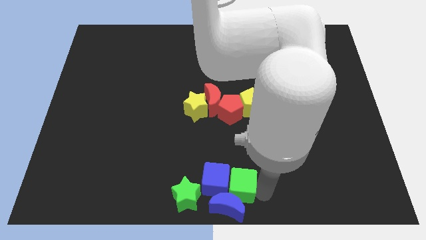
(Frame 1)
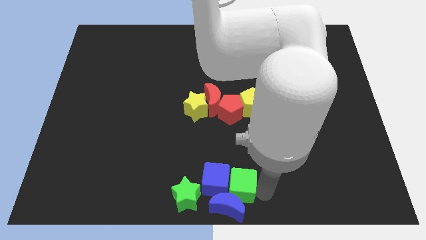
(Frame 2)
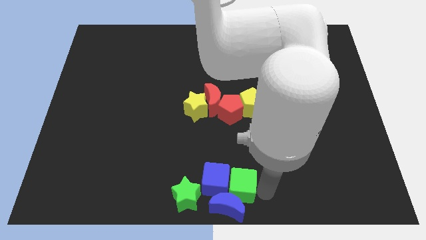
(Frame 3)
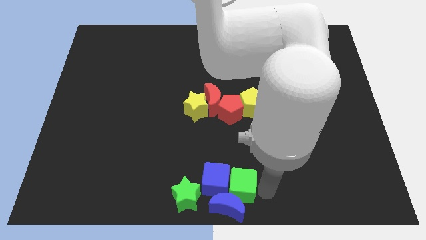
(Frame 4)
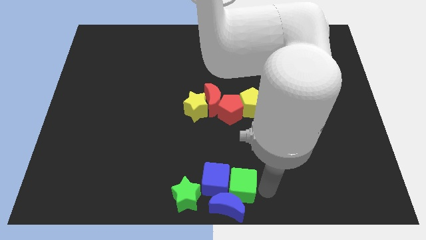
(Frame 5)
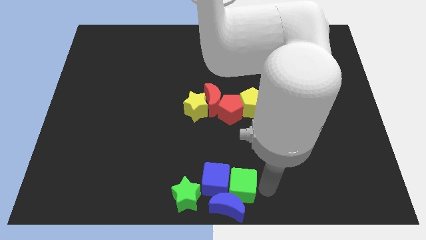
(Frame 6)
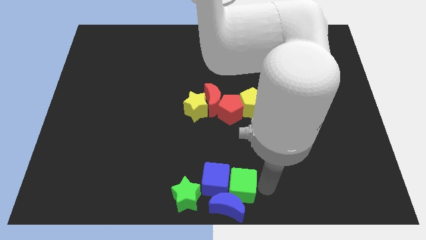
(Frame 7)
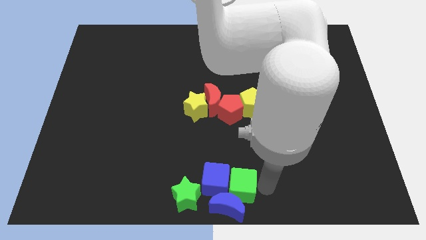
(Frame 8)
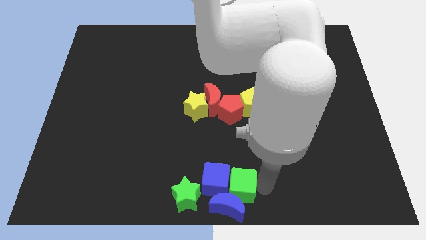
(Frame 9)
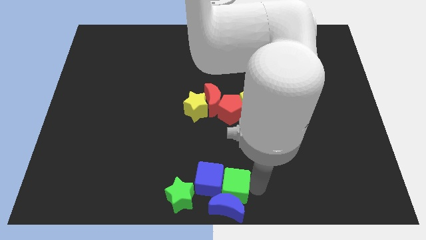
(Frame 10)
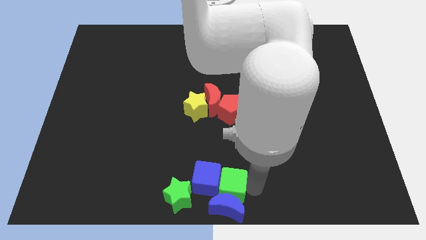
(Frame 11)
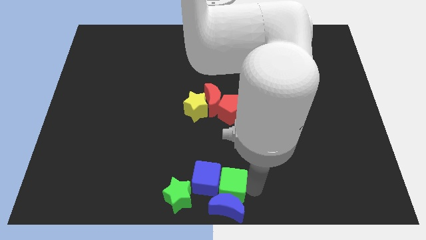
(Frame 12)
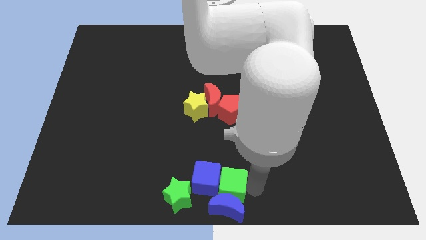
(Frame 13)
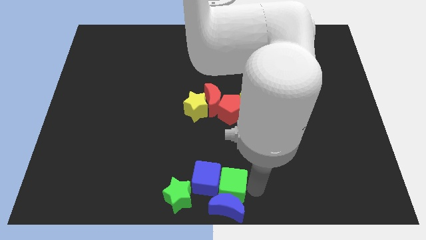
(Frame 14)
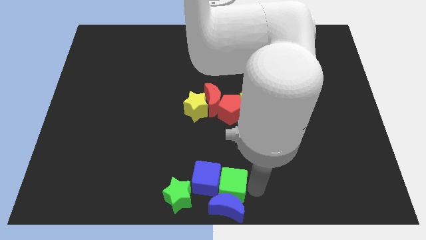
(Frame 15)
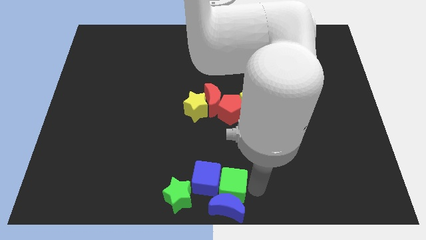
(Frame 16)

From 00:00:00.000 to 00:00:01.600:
push the green cube into the blue cube

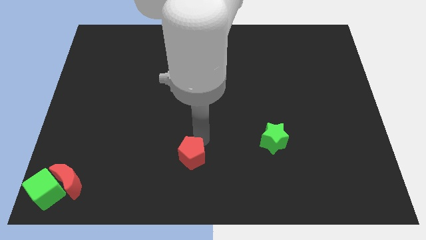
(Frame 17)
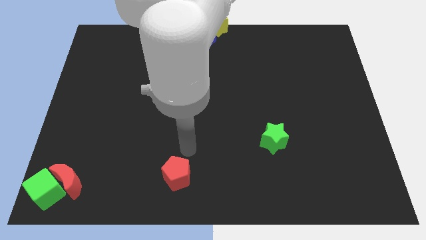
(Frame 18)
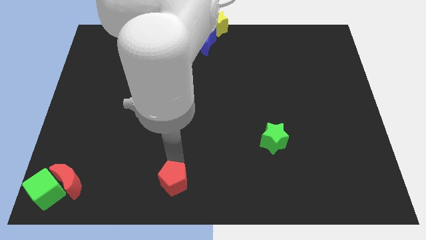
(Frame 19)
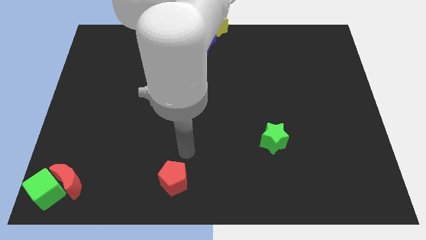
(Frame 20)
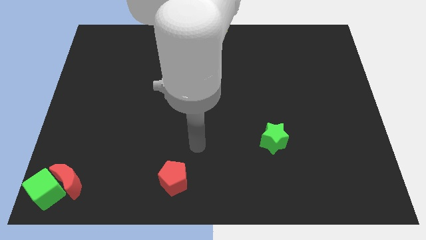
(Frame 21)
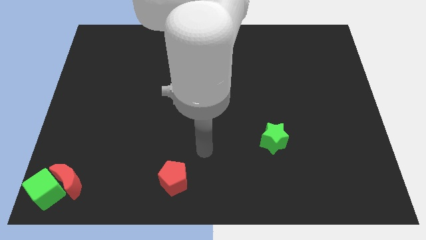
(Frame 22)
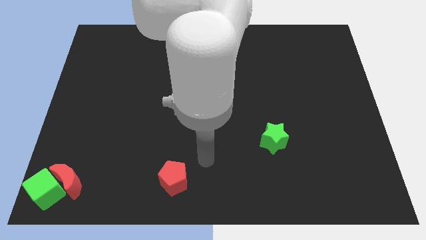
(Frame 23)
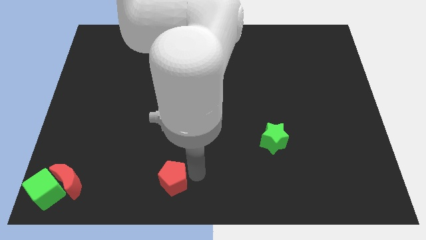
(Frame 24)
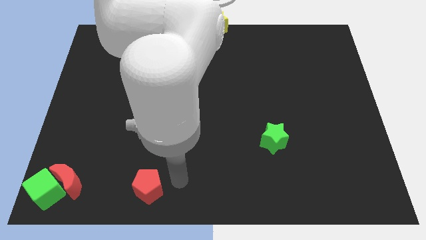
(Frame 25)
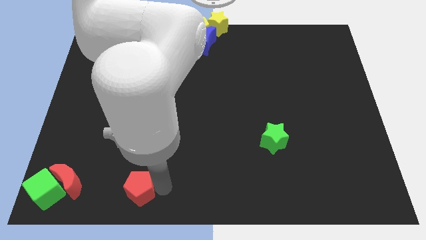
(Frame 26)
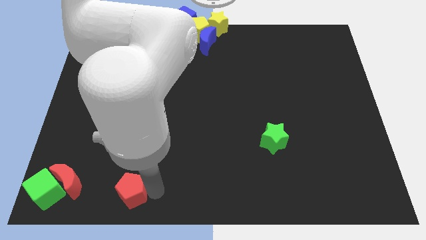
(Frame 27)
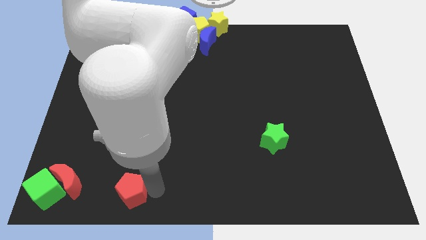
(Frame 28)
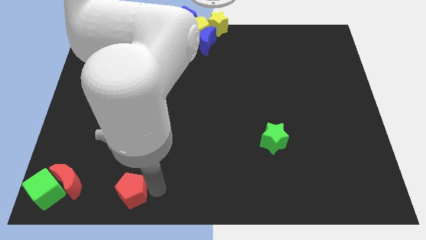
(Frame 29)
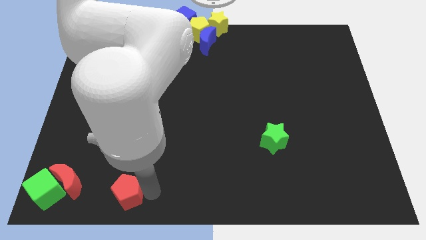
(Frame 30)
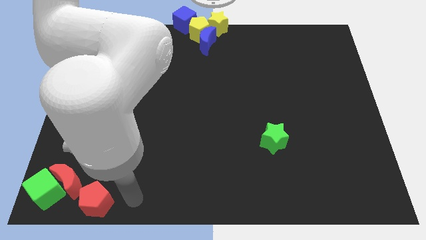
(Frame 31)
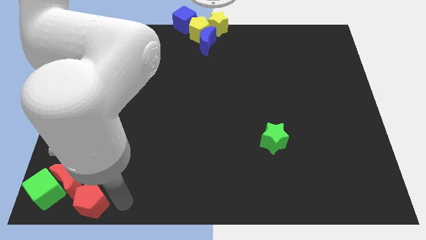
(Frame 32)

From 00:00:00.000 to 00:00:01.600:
move the red pentagon to the bottom left corner

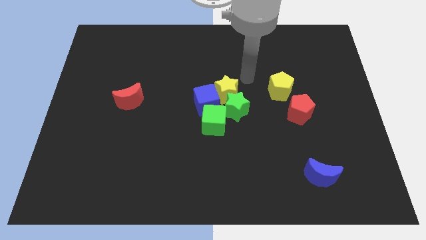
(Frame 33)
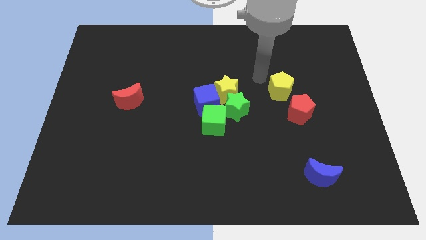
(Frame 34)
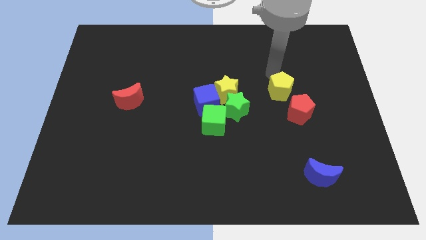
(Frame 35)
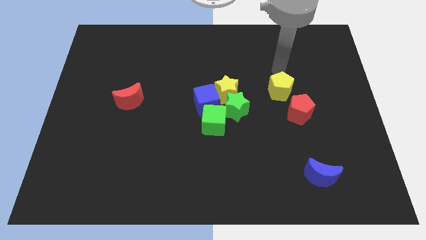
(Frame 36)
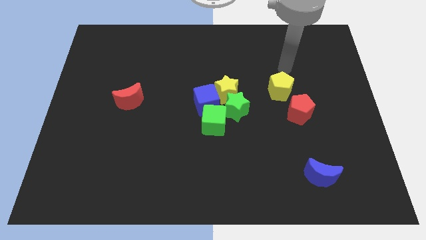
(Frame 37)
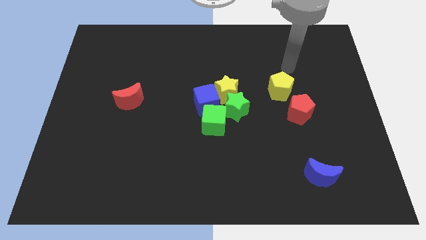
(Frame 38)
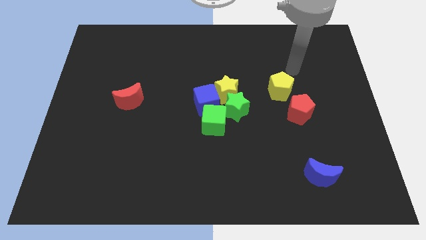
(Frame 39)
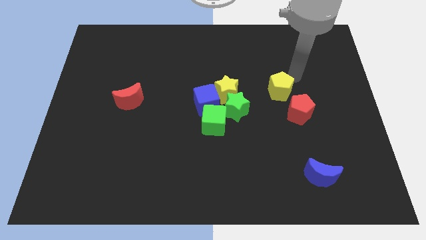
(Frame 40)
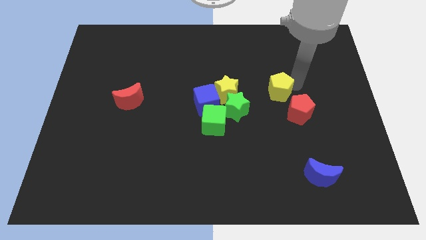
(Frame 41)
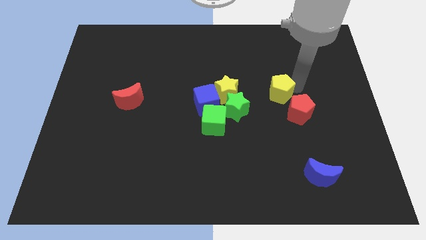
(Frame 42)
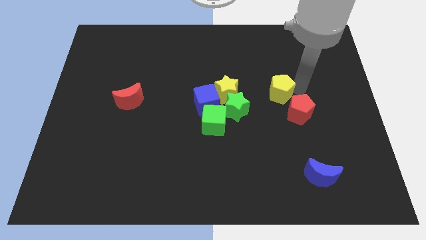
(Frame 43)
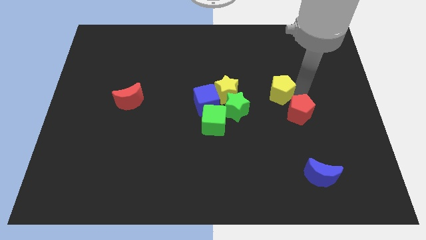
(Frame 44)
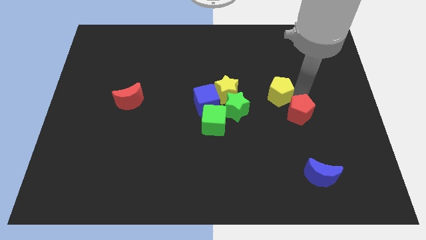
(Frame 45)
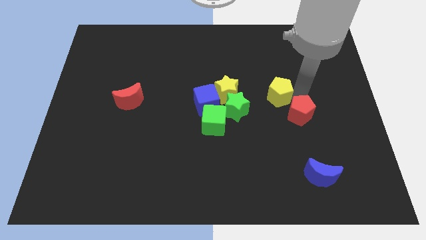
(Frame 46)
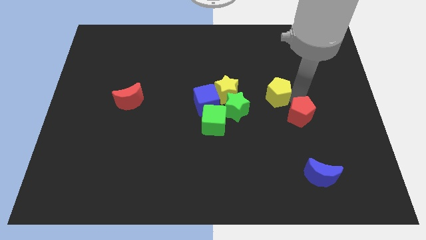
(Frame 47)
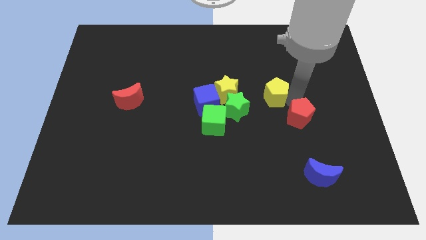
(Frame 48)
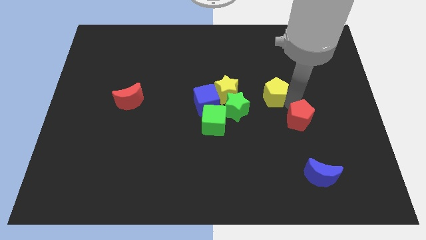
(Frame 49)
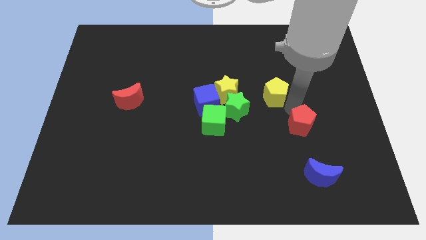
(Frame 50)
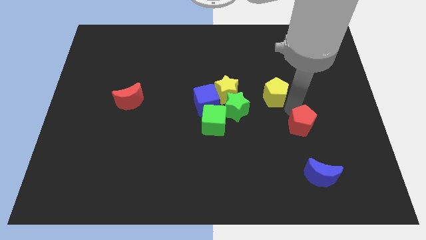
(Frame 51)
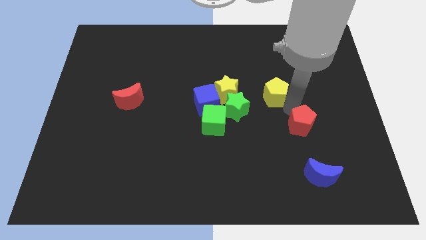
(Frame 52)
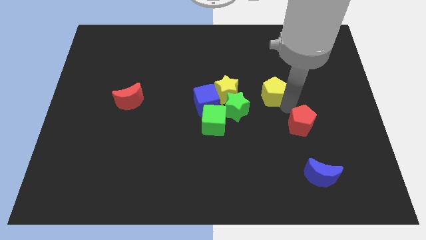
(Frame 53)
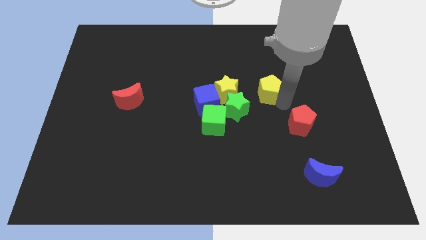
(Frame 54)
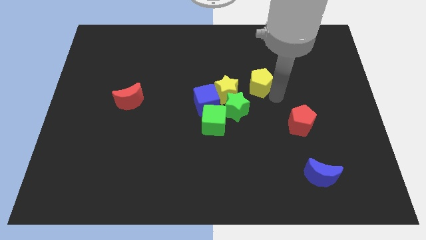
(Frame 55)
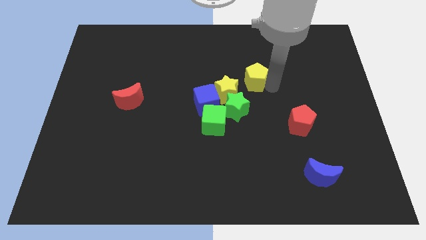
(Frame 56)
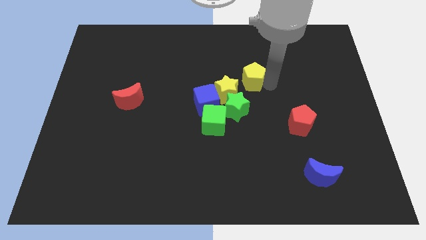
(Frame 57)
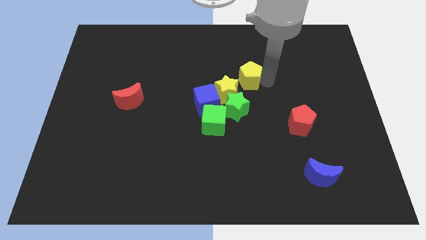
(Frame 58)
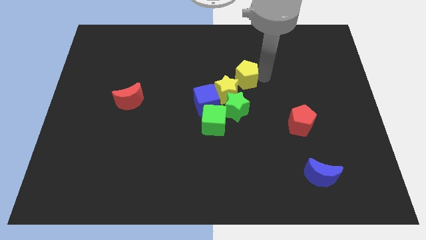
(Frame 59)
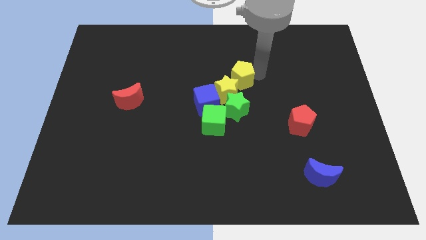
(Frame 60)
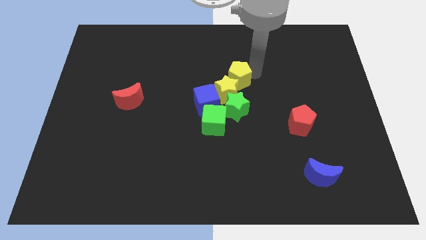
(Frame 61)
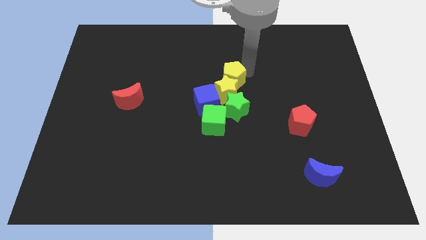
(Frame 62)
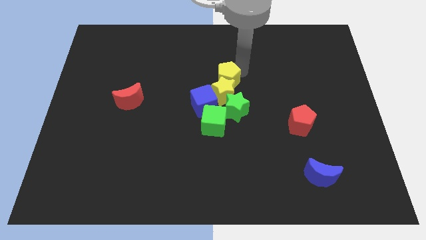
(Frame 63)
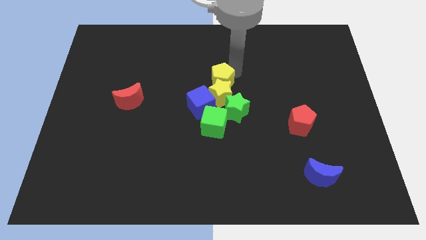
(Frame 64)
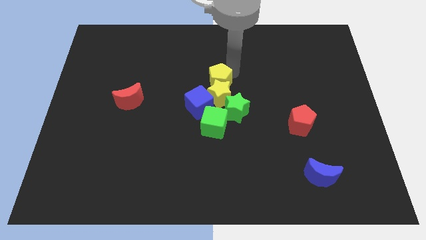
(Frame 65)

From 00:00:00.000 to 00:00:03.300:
place the yellow pentagon above the yellow star

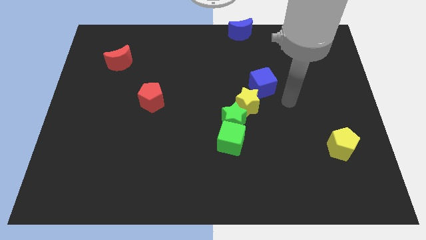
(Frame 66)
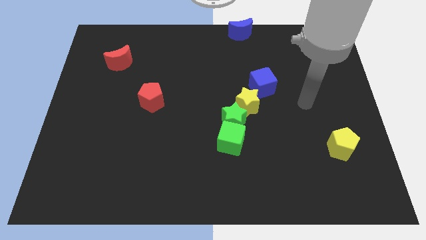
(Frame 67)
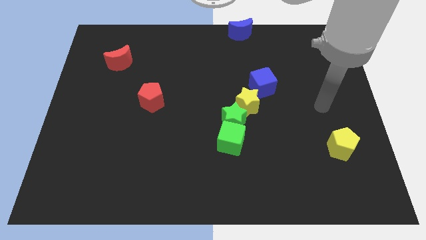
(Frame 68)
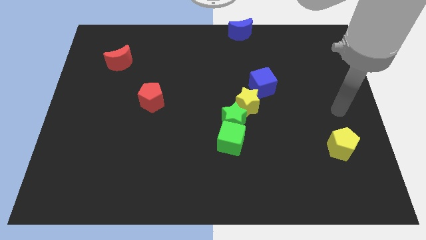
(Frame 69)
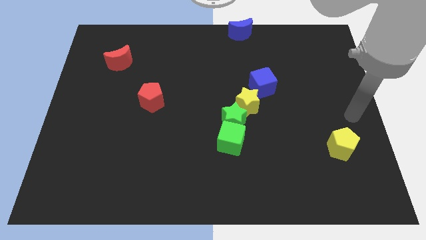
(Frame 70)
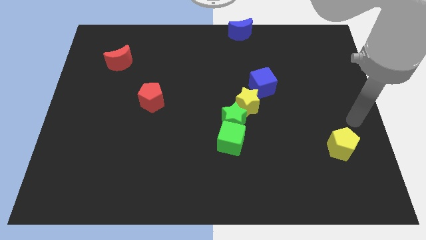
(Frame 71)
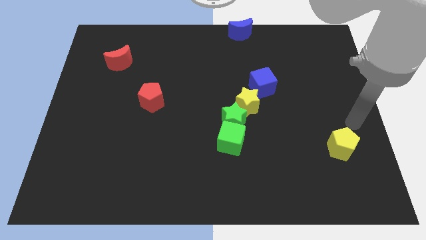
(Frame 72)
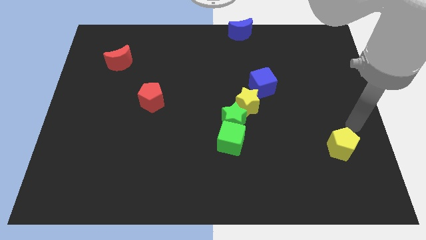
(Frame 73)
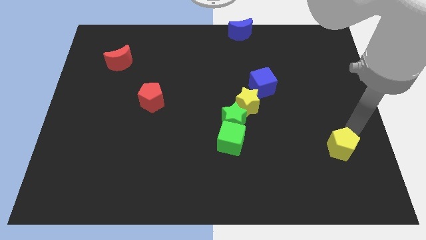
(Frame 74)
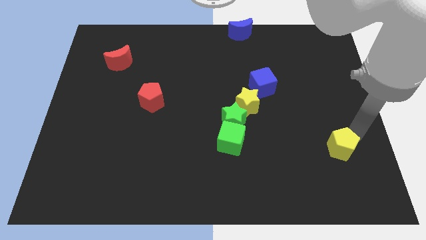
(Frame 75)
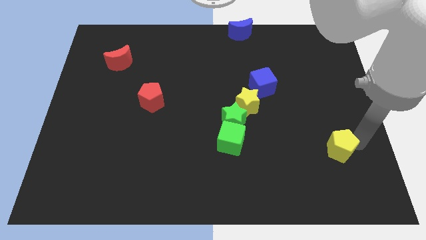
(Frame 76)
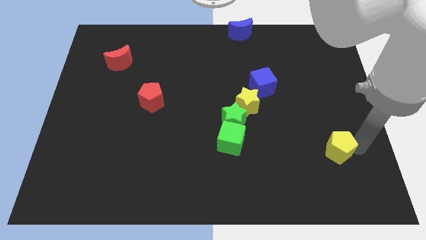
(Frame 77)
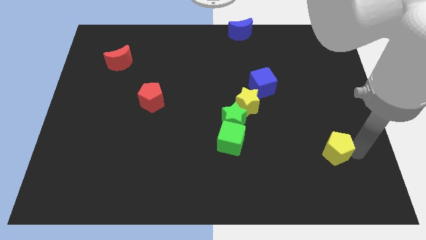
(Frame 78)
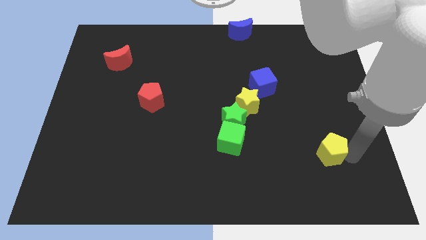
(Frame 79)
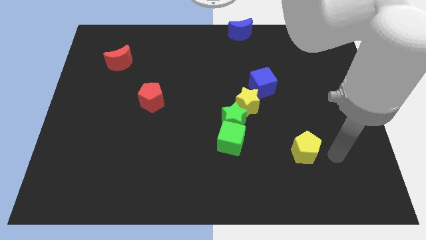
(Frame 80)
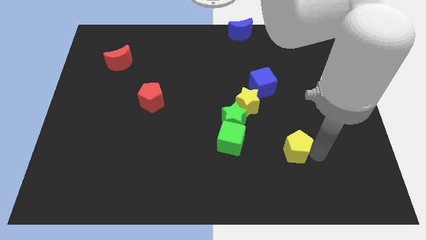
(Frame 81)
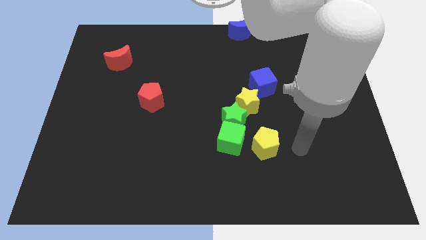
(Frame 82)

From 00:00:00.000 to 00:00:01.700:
push the yellow pentagon towards the green cube

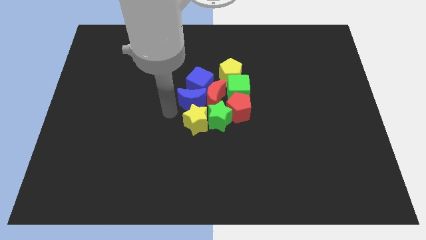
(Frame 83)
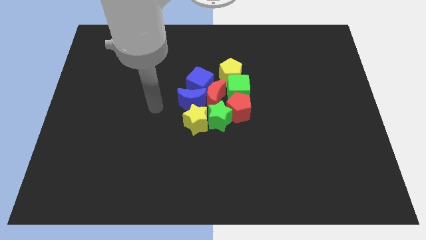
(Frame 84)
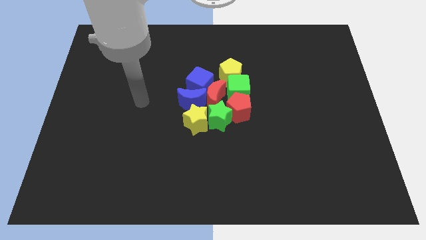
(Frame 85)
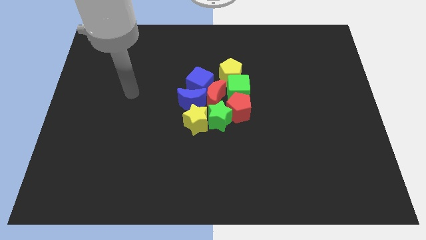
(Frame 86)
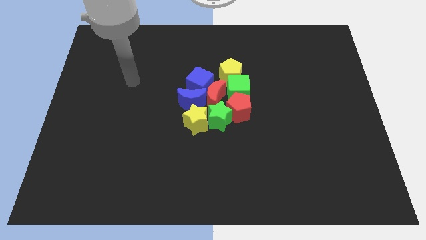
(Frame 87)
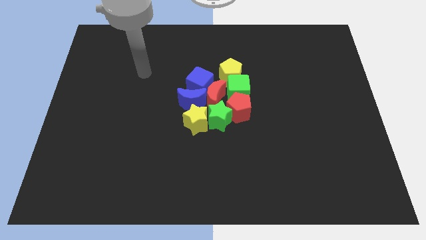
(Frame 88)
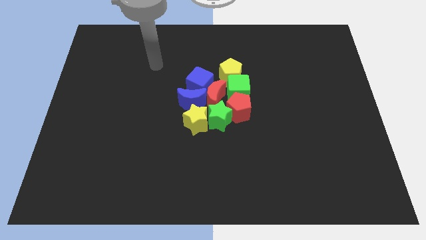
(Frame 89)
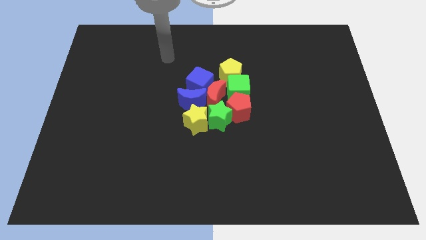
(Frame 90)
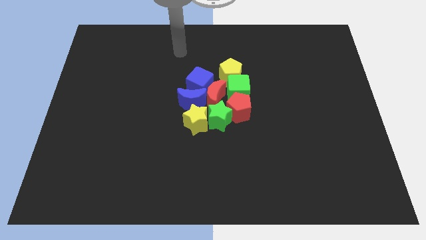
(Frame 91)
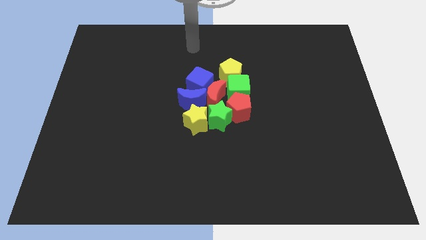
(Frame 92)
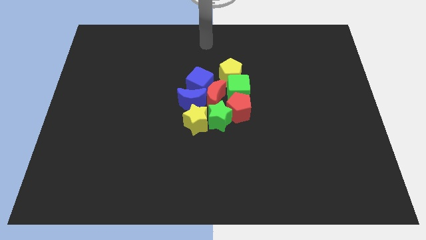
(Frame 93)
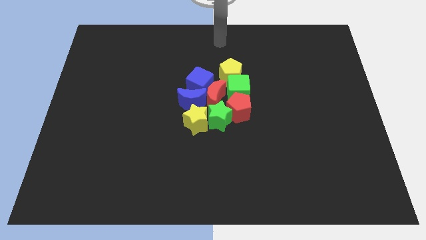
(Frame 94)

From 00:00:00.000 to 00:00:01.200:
move arm towards top middle of the board
